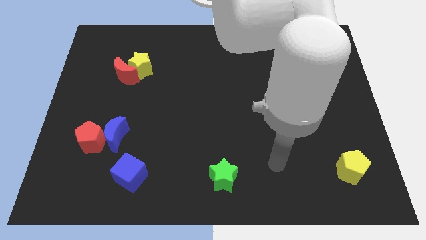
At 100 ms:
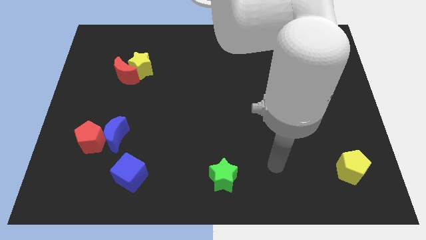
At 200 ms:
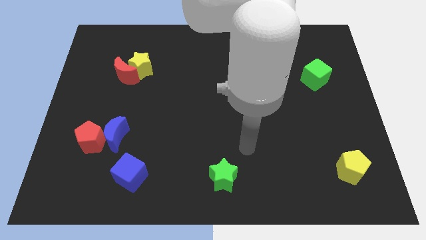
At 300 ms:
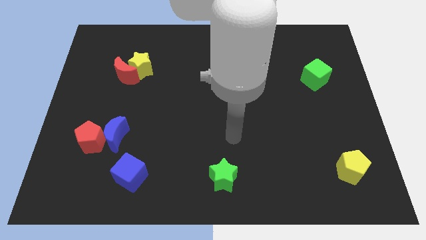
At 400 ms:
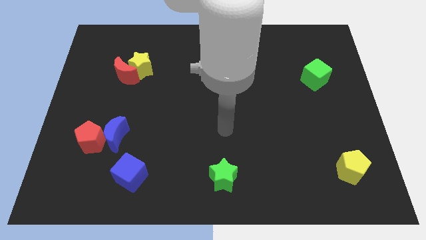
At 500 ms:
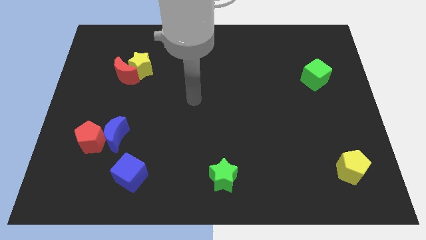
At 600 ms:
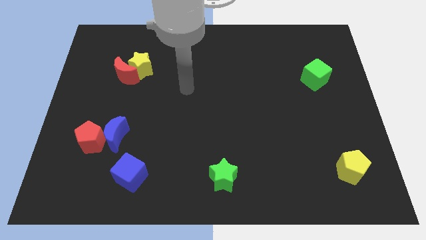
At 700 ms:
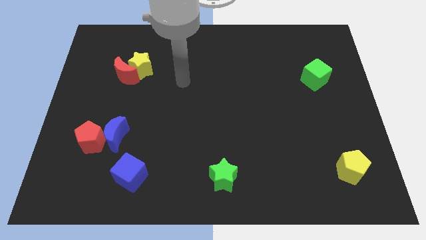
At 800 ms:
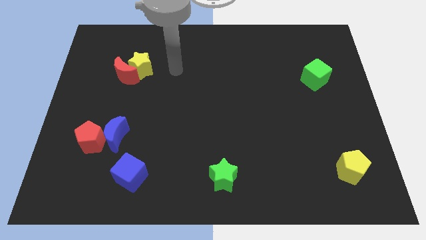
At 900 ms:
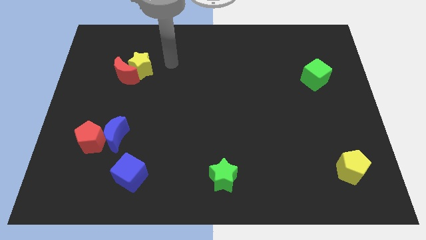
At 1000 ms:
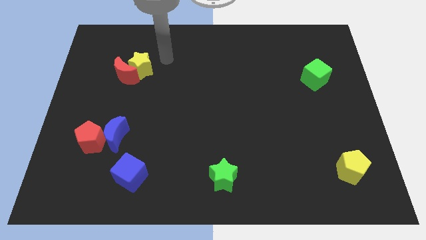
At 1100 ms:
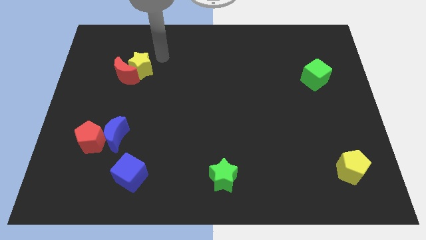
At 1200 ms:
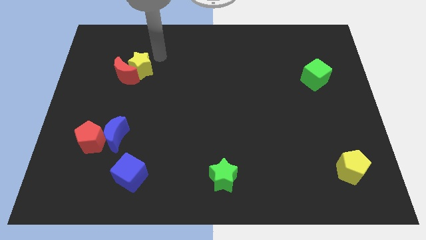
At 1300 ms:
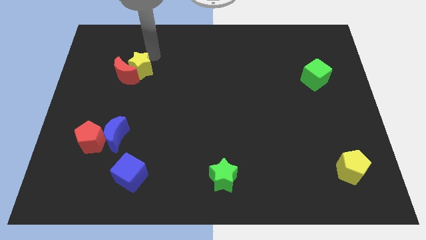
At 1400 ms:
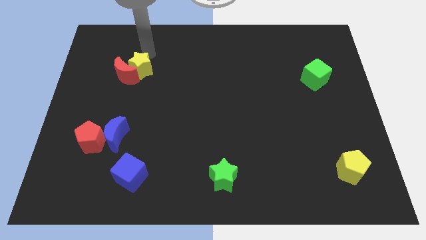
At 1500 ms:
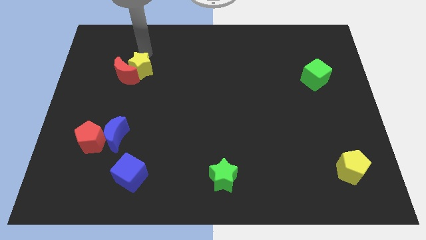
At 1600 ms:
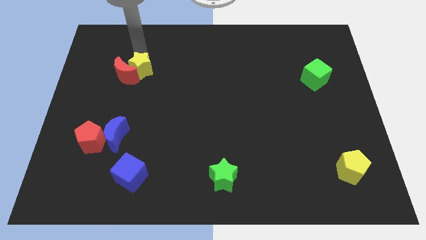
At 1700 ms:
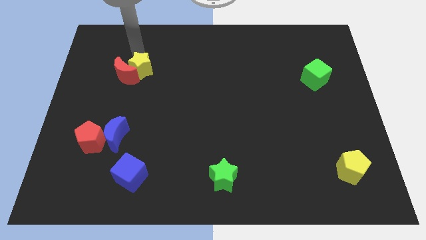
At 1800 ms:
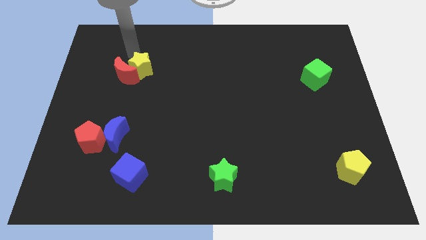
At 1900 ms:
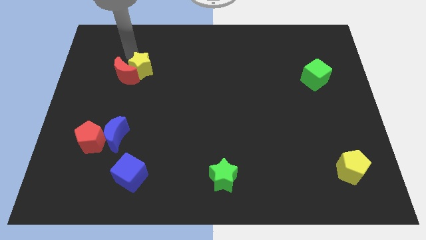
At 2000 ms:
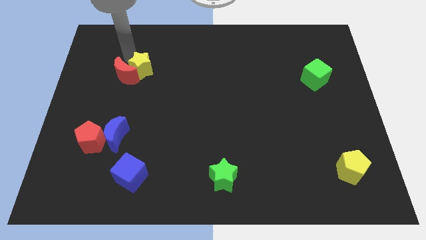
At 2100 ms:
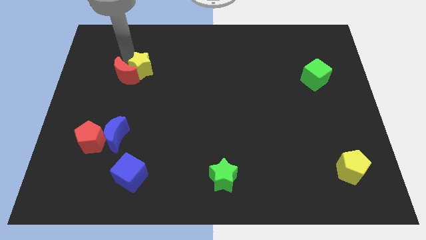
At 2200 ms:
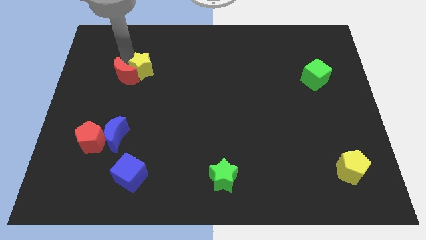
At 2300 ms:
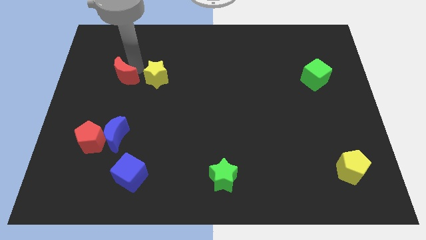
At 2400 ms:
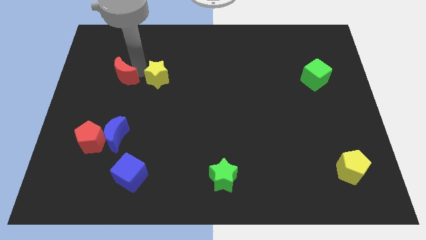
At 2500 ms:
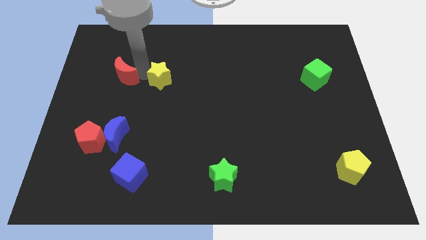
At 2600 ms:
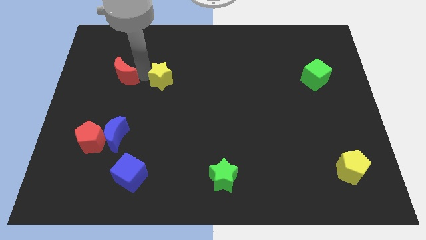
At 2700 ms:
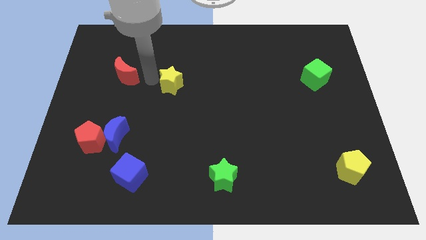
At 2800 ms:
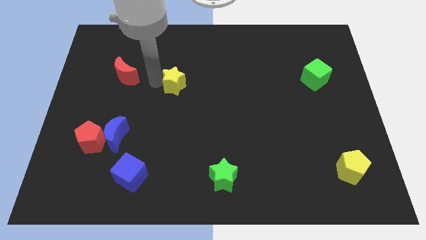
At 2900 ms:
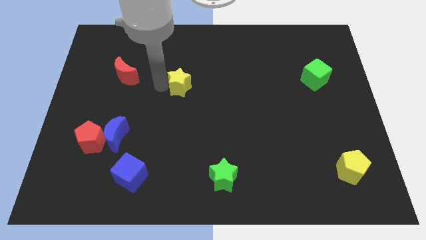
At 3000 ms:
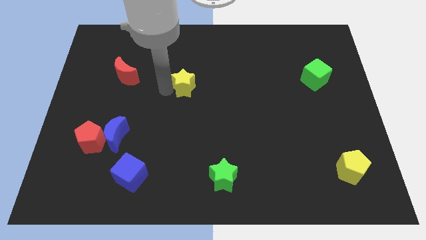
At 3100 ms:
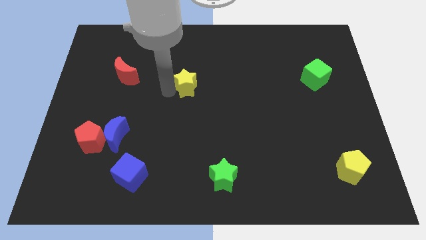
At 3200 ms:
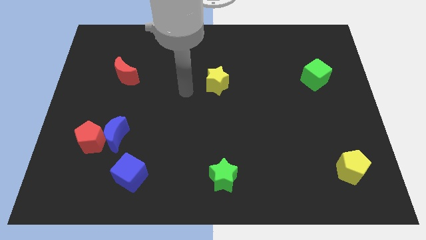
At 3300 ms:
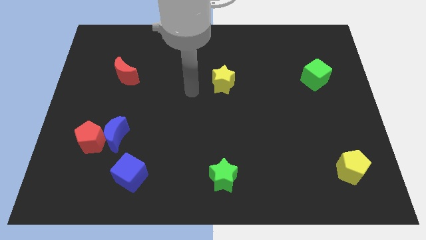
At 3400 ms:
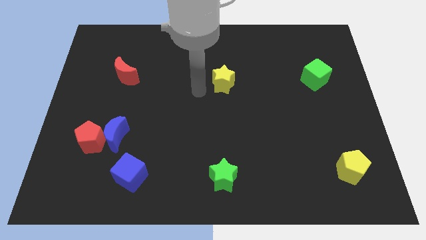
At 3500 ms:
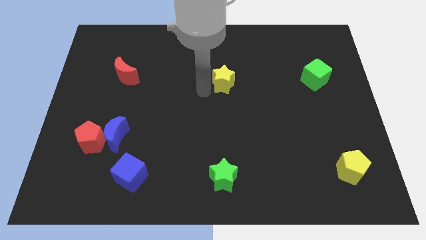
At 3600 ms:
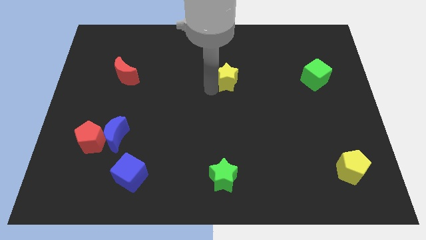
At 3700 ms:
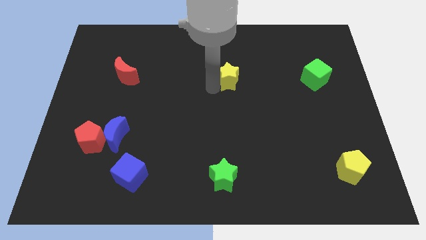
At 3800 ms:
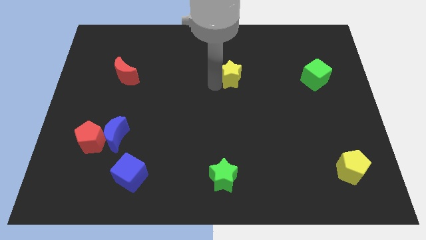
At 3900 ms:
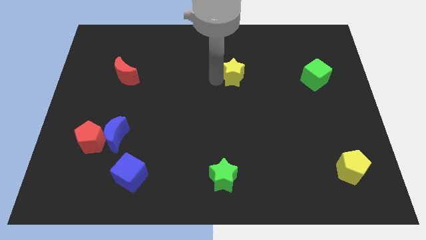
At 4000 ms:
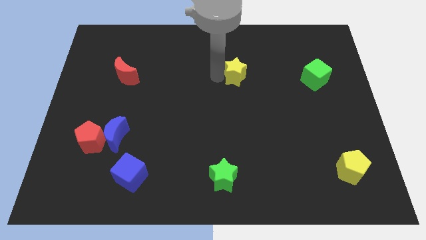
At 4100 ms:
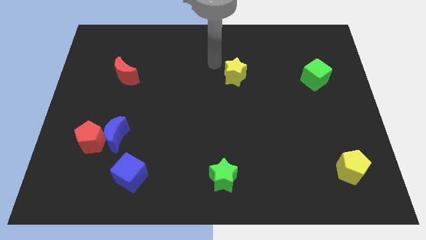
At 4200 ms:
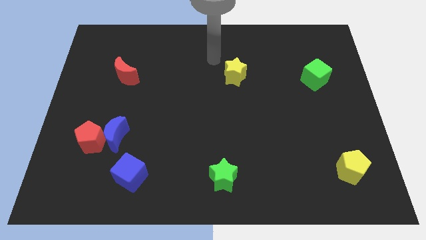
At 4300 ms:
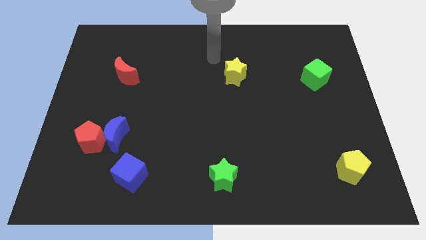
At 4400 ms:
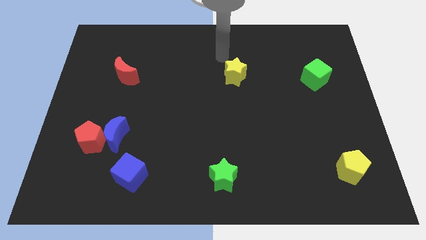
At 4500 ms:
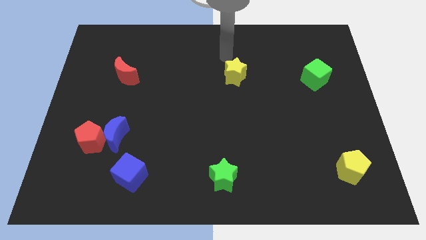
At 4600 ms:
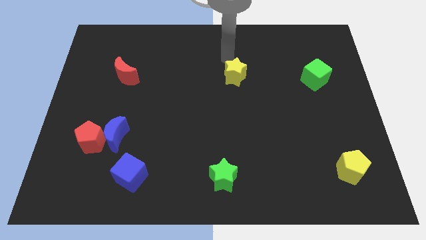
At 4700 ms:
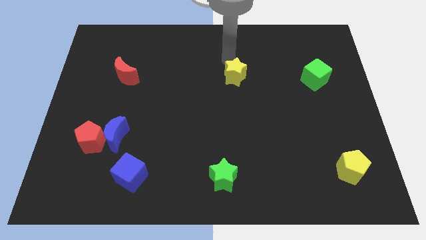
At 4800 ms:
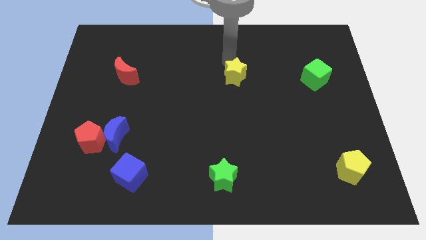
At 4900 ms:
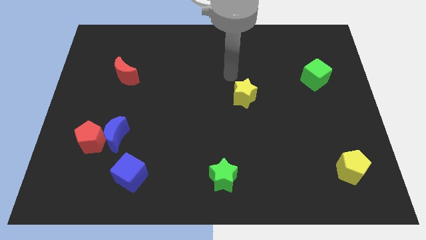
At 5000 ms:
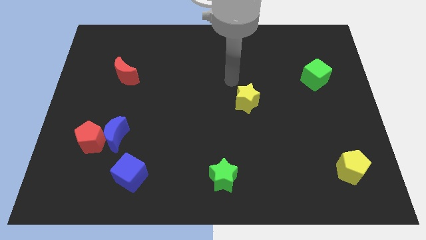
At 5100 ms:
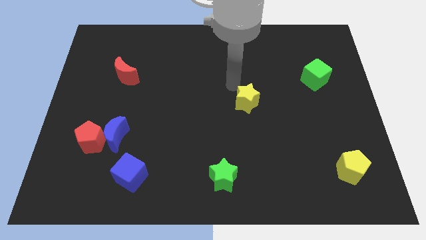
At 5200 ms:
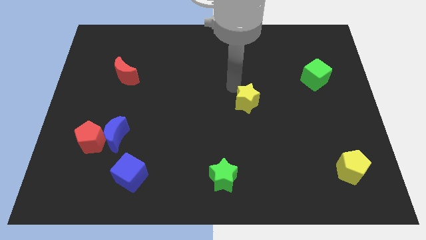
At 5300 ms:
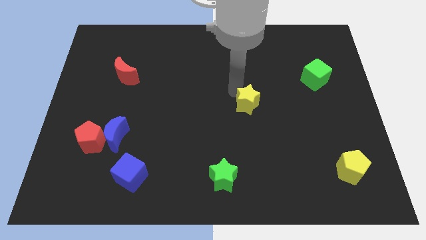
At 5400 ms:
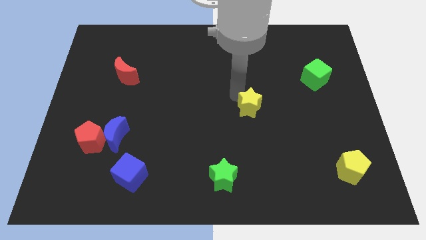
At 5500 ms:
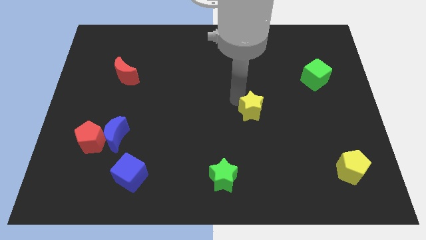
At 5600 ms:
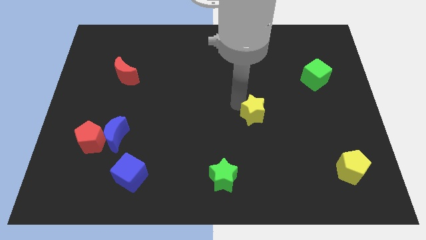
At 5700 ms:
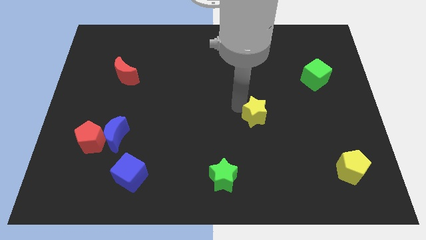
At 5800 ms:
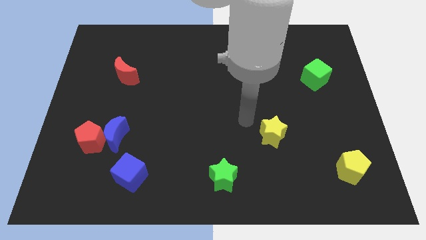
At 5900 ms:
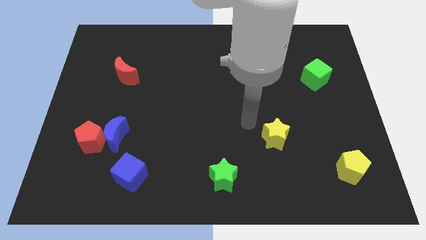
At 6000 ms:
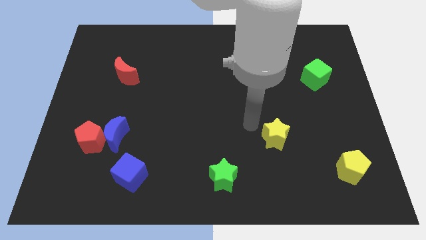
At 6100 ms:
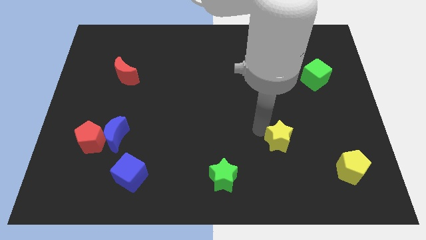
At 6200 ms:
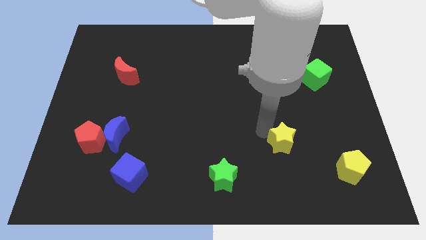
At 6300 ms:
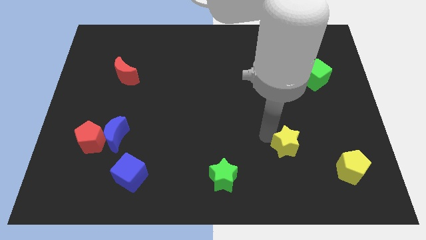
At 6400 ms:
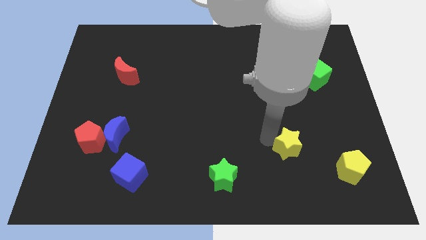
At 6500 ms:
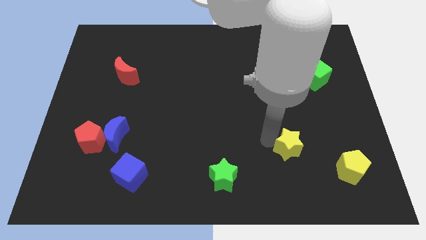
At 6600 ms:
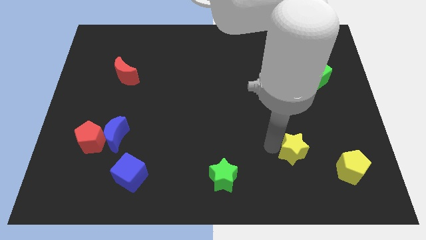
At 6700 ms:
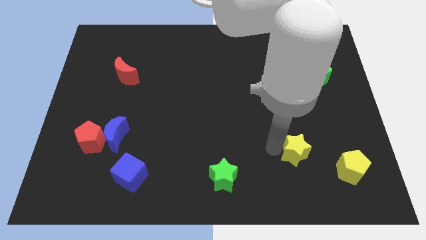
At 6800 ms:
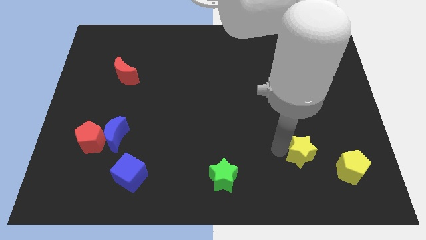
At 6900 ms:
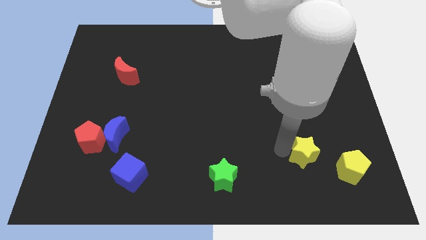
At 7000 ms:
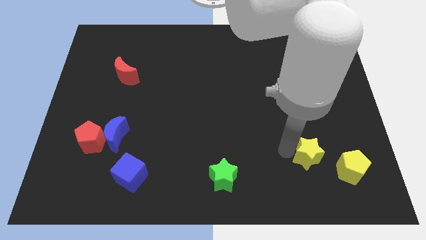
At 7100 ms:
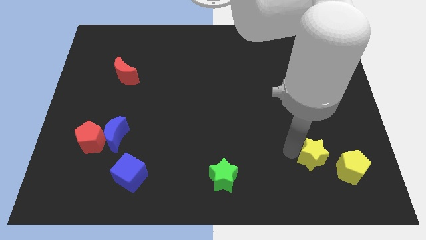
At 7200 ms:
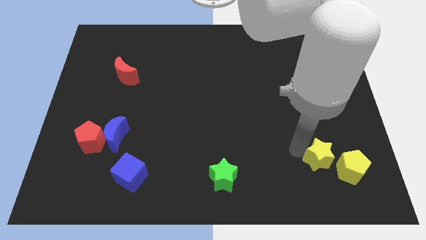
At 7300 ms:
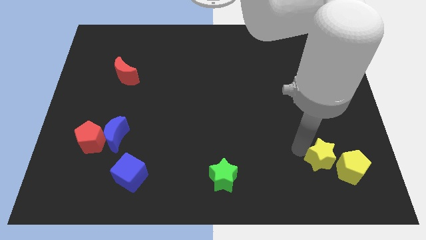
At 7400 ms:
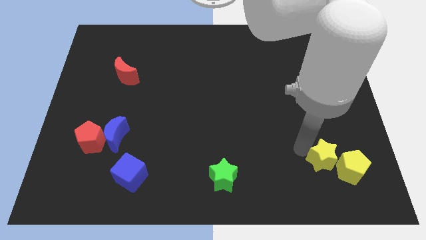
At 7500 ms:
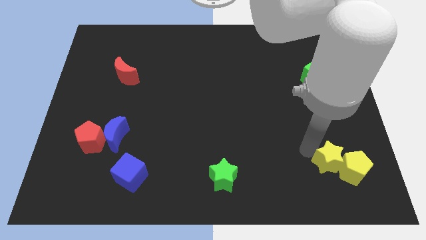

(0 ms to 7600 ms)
push the yellow star towards the yellow pentagon

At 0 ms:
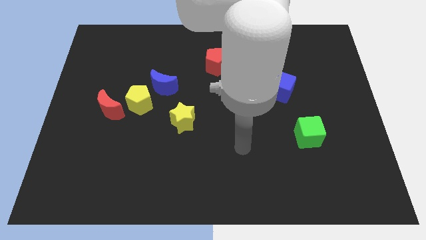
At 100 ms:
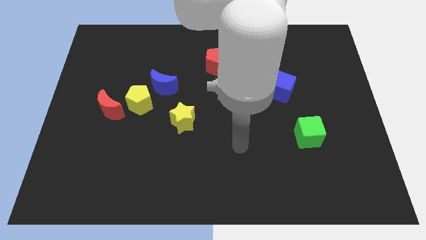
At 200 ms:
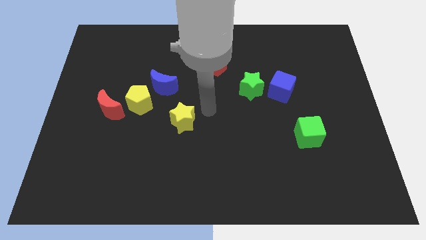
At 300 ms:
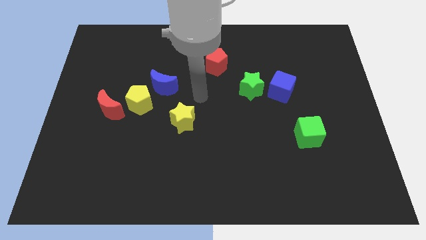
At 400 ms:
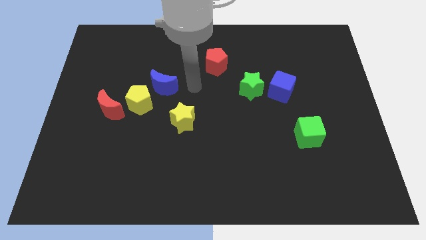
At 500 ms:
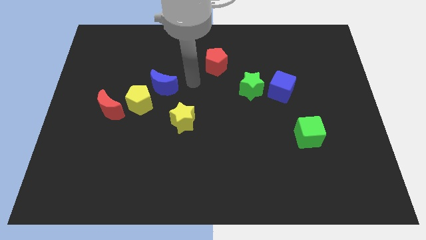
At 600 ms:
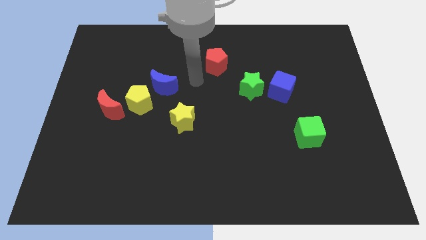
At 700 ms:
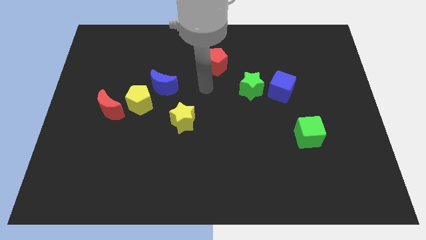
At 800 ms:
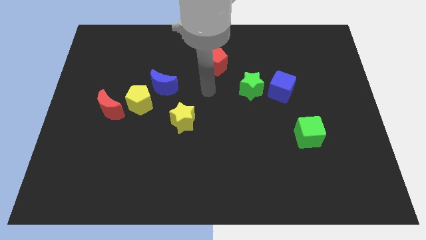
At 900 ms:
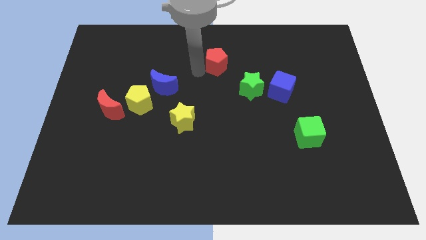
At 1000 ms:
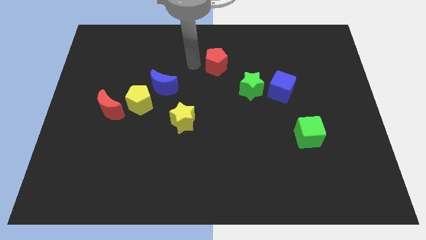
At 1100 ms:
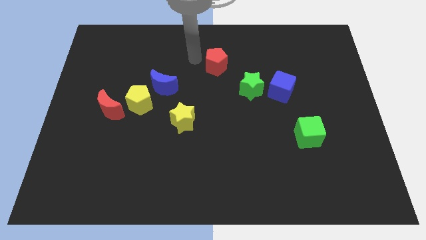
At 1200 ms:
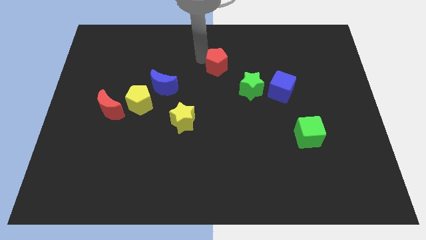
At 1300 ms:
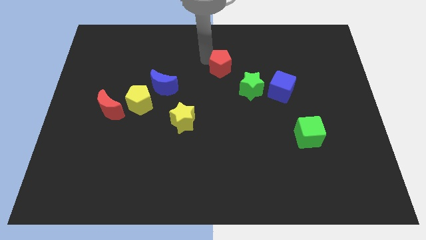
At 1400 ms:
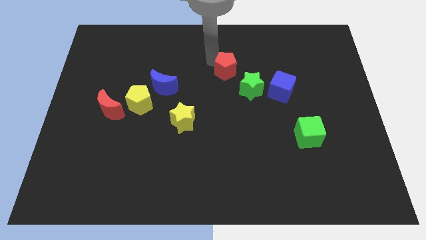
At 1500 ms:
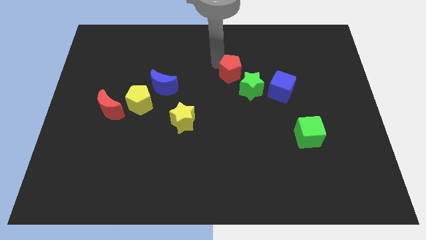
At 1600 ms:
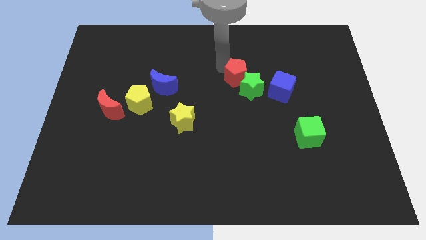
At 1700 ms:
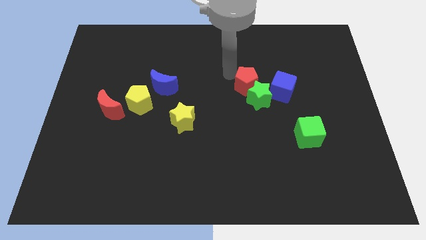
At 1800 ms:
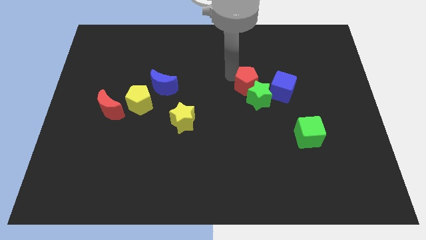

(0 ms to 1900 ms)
put the red pentagon next to the green star
